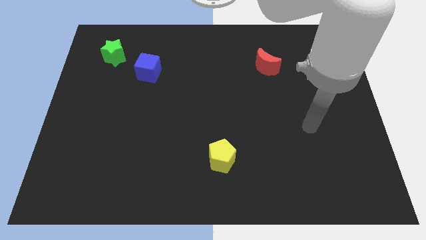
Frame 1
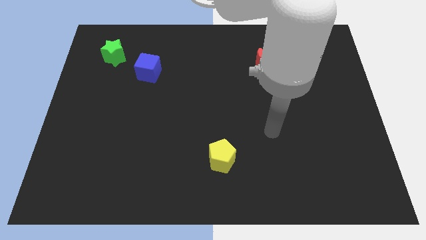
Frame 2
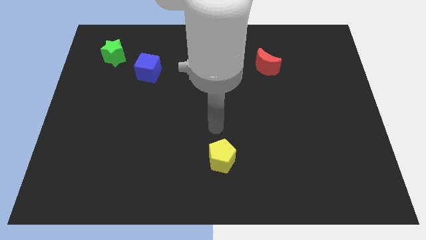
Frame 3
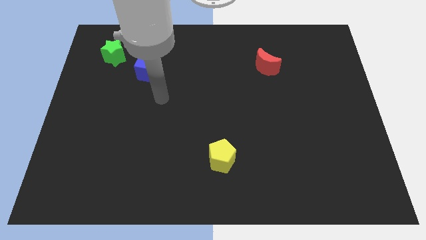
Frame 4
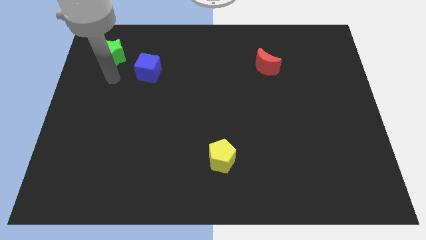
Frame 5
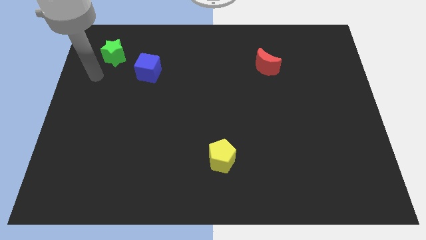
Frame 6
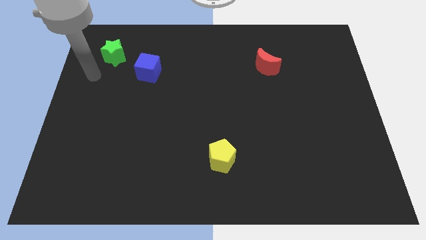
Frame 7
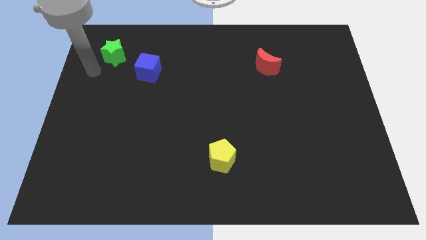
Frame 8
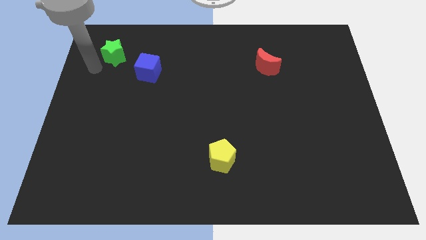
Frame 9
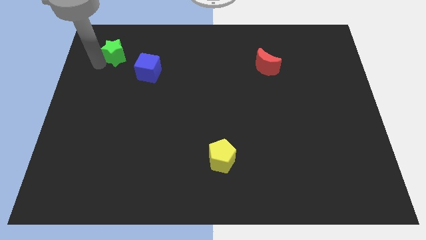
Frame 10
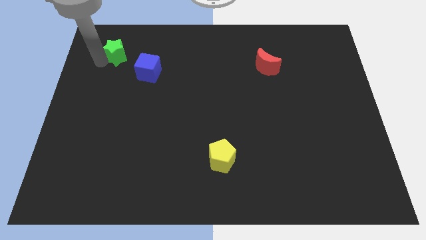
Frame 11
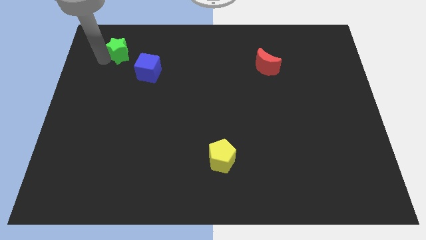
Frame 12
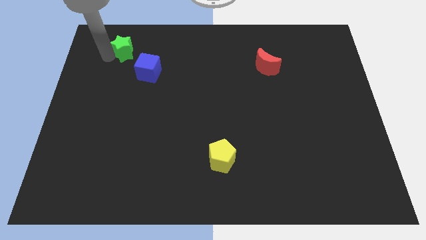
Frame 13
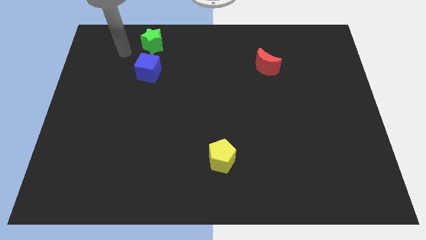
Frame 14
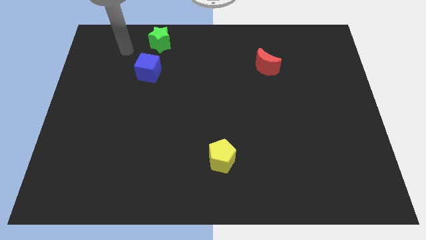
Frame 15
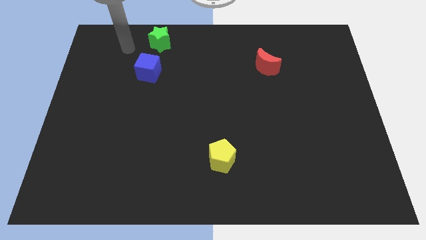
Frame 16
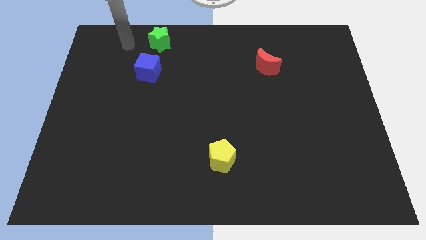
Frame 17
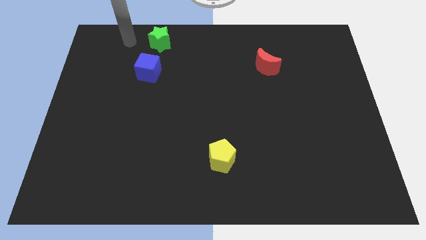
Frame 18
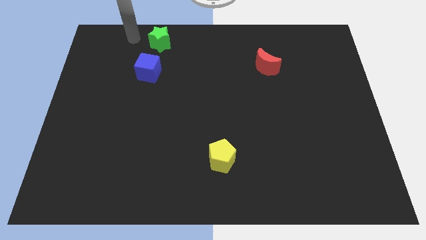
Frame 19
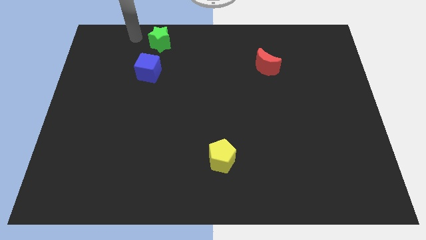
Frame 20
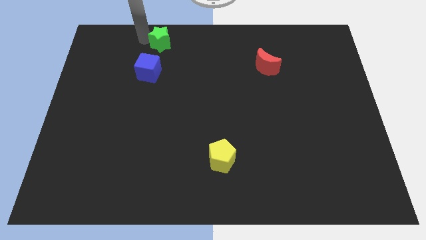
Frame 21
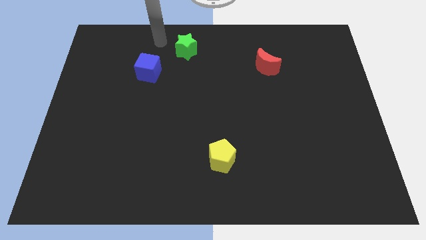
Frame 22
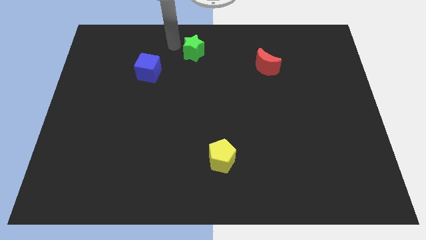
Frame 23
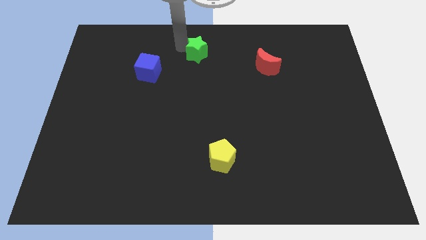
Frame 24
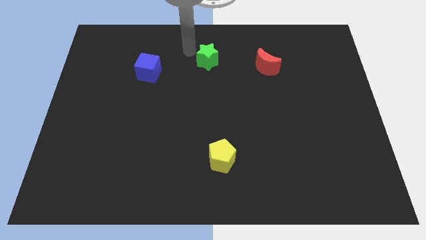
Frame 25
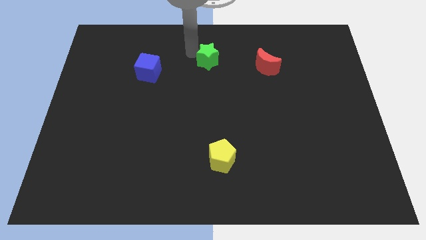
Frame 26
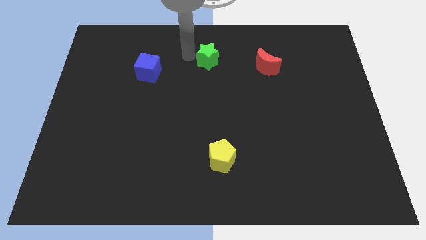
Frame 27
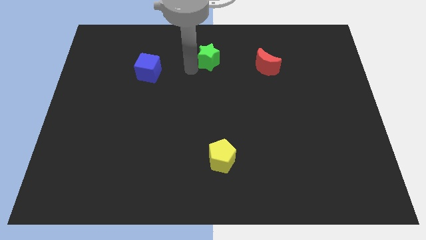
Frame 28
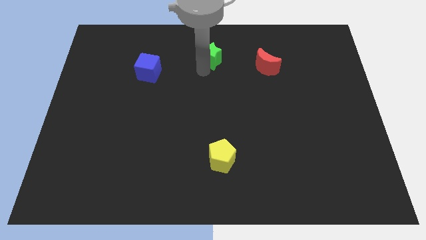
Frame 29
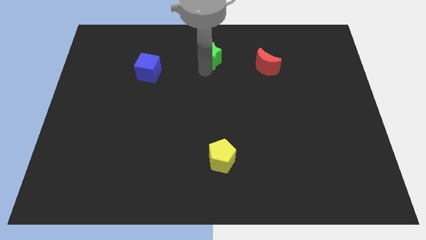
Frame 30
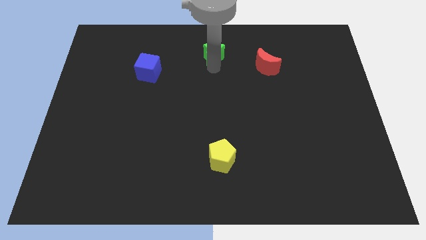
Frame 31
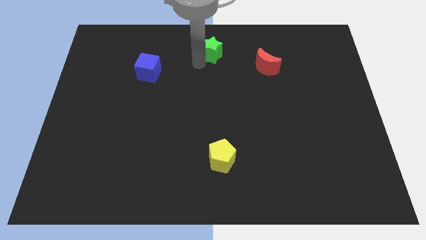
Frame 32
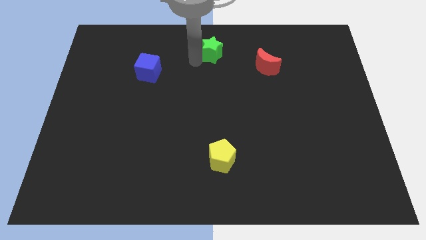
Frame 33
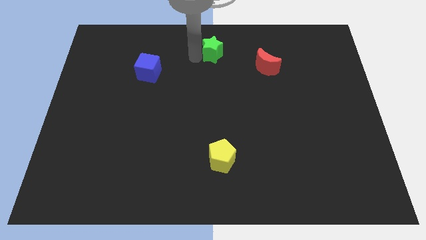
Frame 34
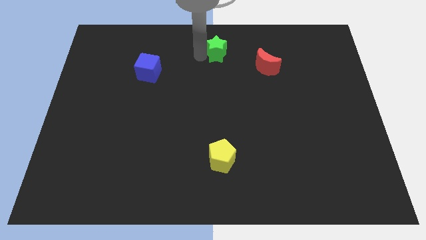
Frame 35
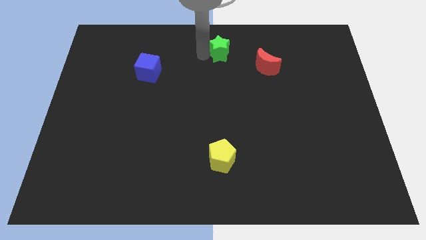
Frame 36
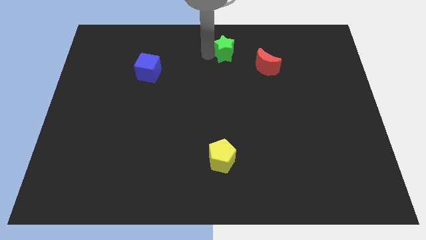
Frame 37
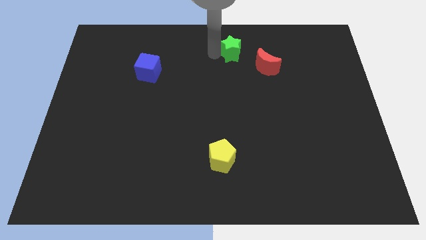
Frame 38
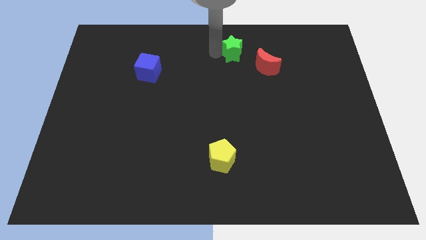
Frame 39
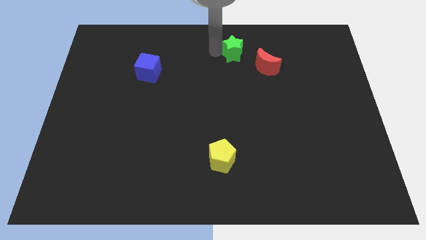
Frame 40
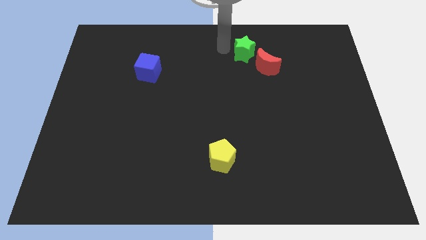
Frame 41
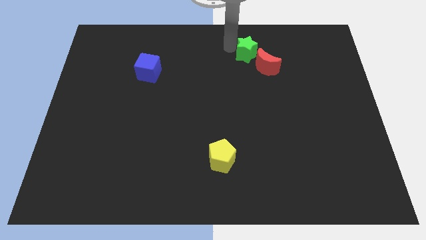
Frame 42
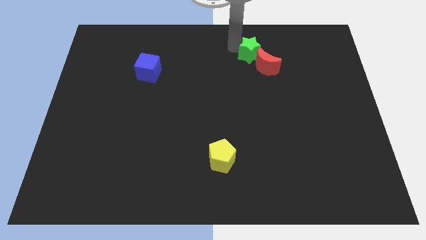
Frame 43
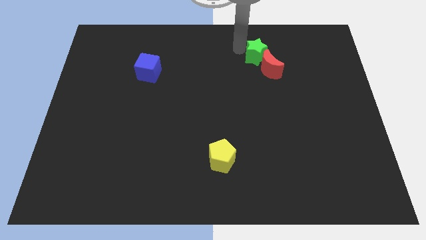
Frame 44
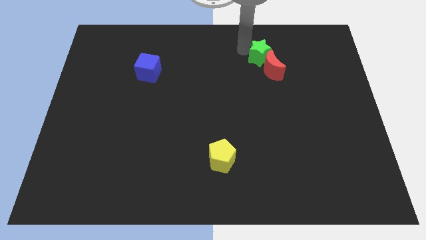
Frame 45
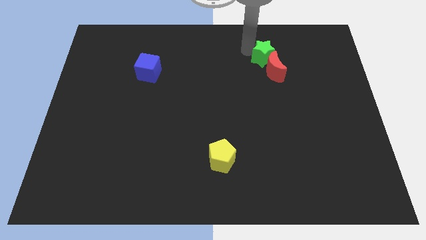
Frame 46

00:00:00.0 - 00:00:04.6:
slide the green star to the red moon

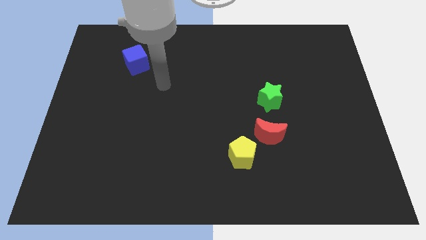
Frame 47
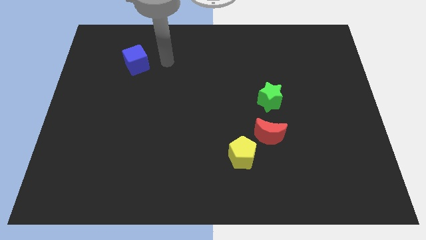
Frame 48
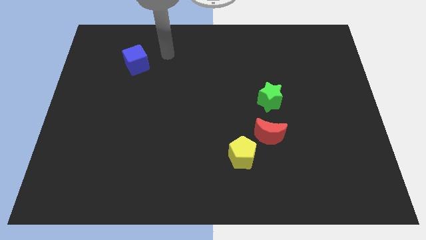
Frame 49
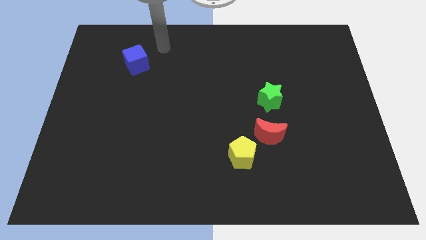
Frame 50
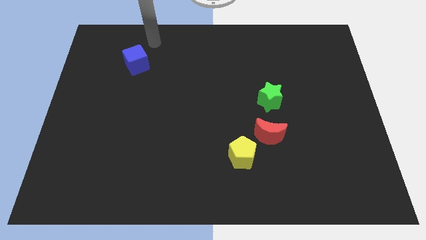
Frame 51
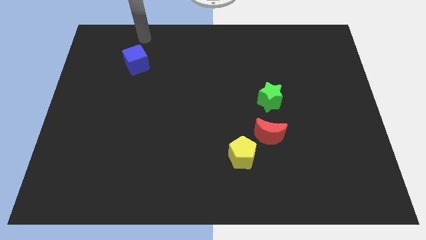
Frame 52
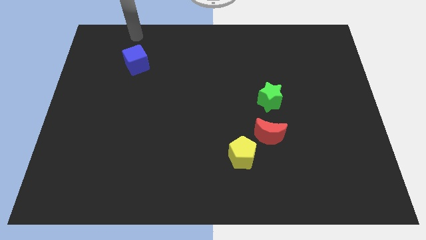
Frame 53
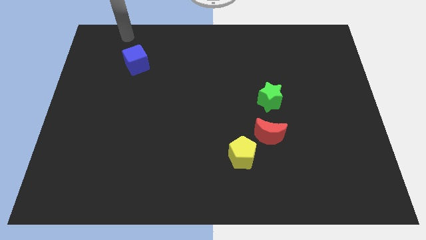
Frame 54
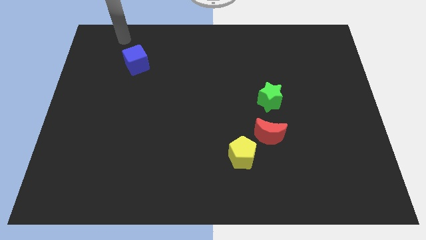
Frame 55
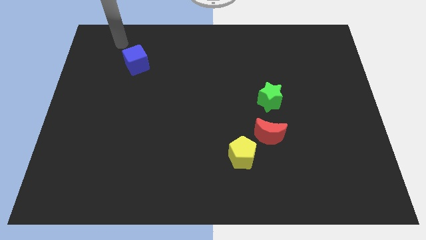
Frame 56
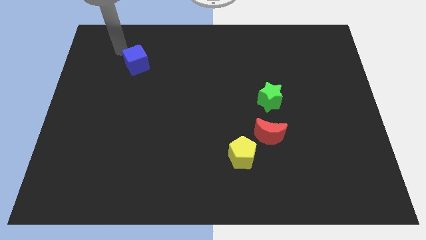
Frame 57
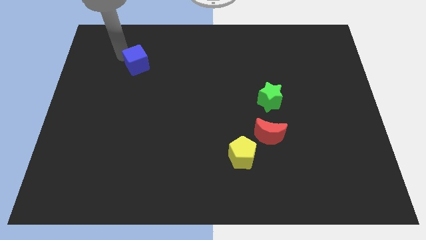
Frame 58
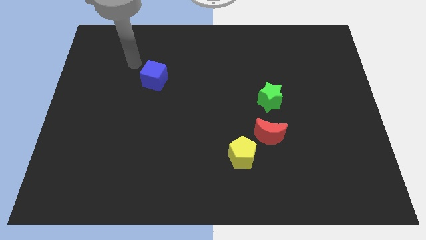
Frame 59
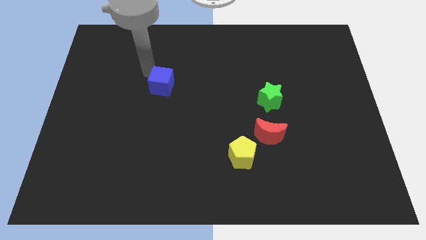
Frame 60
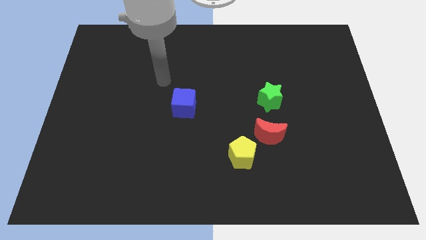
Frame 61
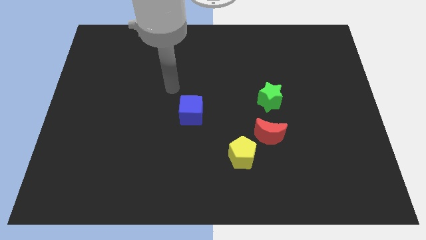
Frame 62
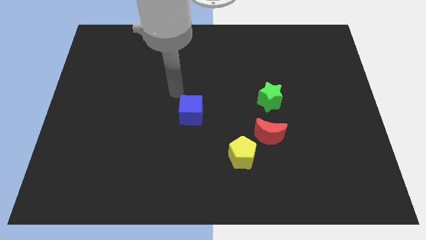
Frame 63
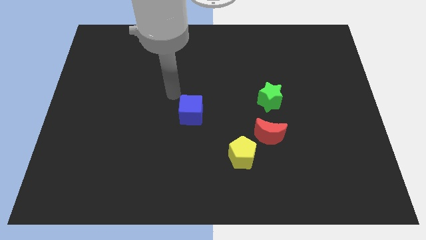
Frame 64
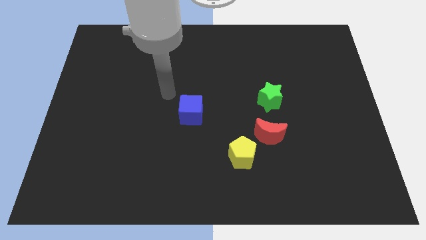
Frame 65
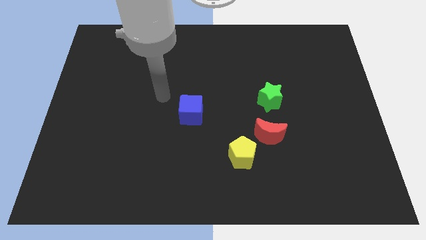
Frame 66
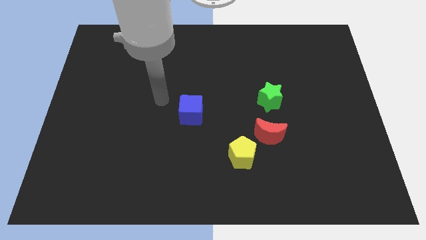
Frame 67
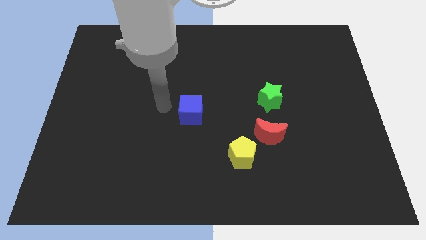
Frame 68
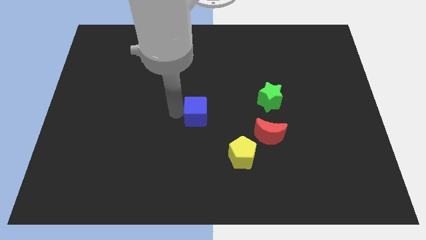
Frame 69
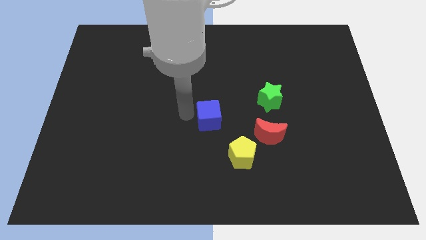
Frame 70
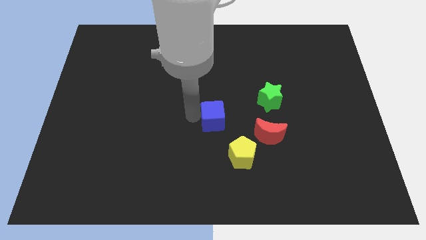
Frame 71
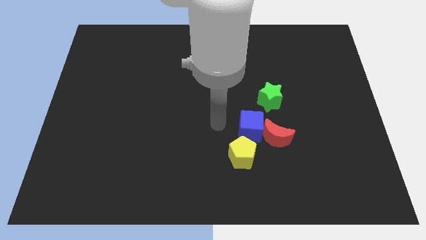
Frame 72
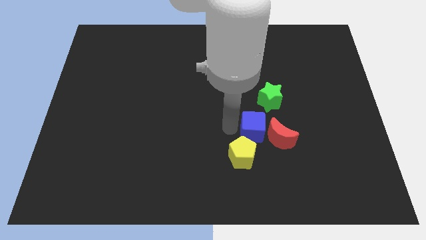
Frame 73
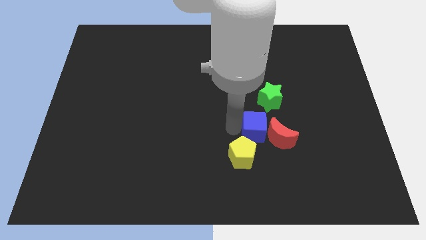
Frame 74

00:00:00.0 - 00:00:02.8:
slide the blue cube close to the red moon

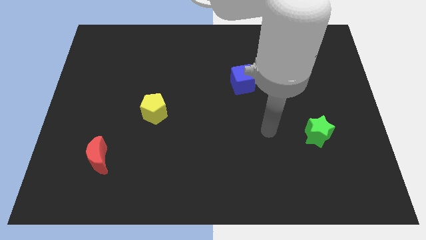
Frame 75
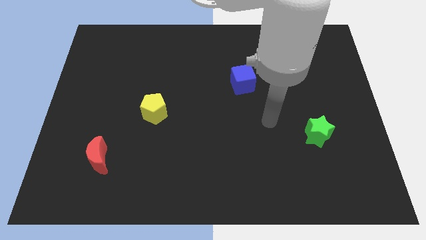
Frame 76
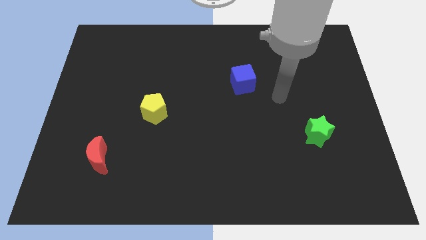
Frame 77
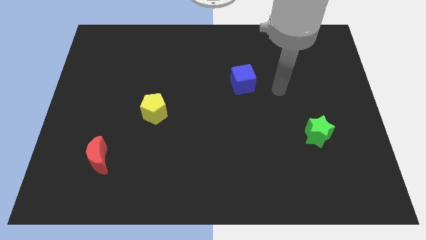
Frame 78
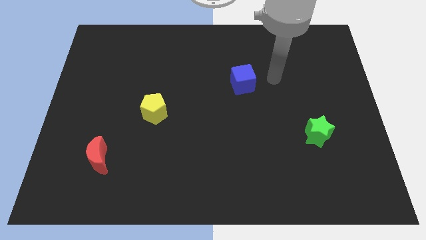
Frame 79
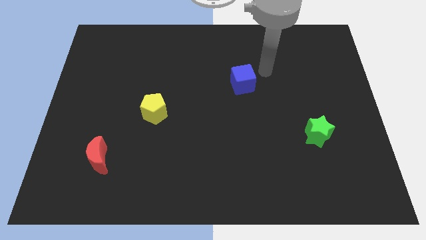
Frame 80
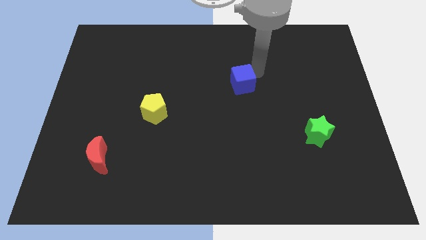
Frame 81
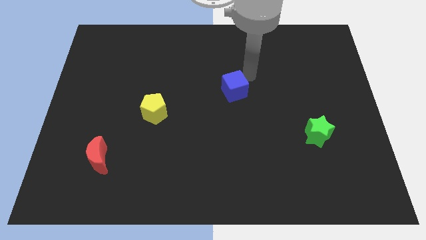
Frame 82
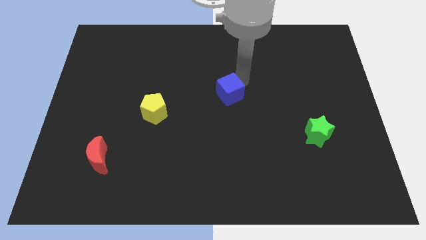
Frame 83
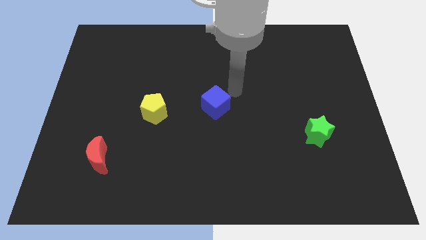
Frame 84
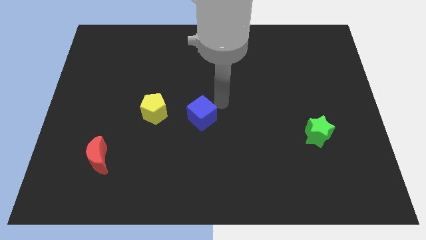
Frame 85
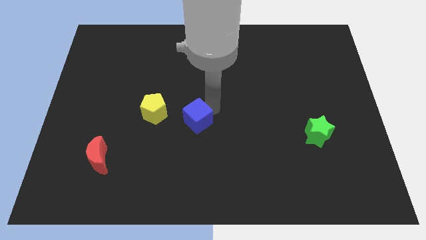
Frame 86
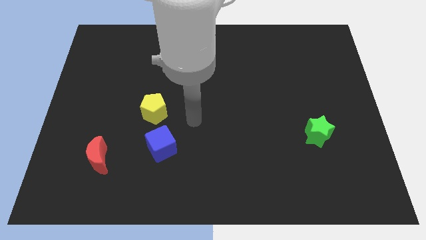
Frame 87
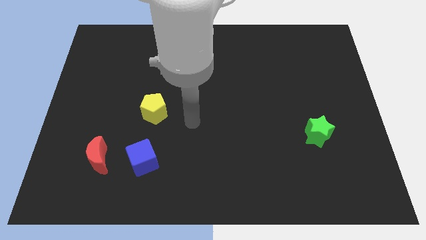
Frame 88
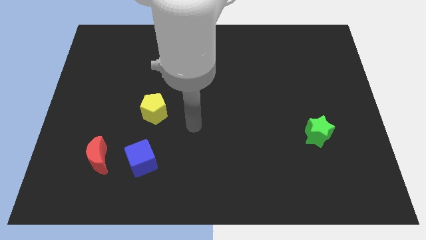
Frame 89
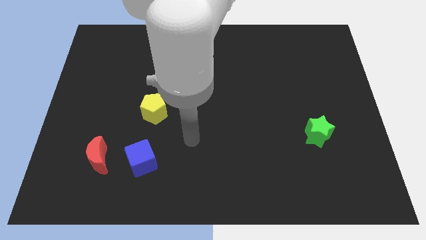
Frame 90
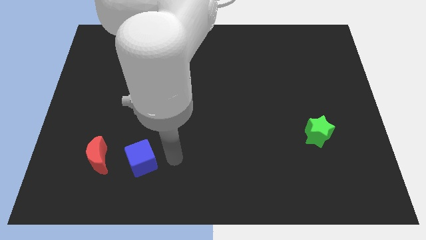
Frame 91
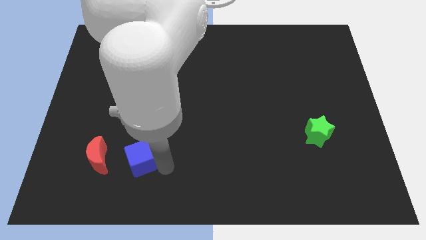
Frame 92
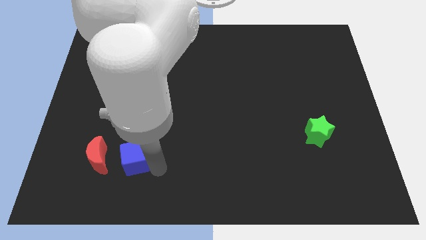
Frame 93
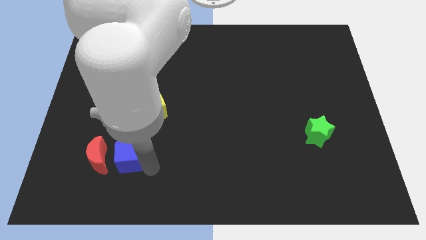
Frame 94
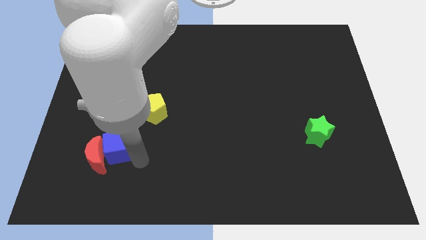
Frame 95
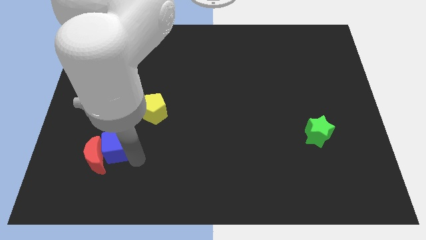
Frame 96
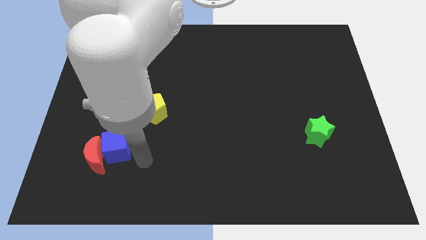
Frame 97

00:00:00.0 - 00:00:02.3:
slide the blue cube next to the red moon
